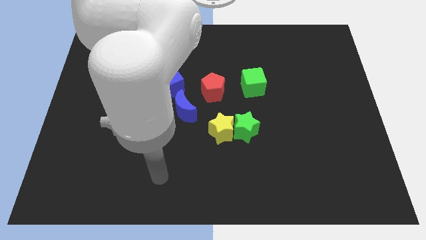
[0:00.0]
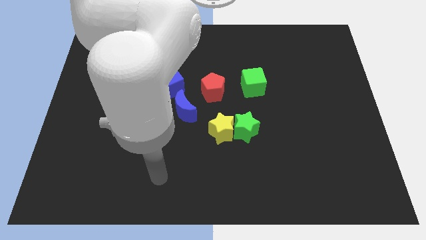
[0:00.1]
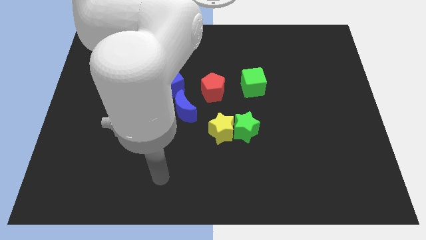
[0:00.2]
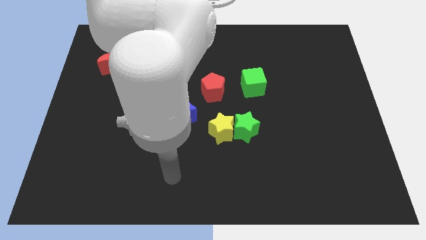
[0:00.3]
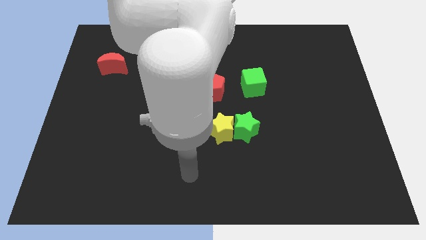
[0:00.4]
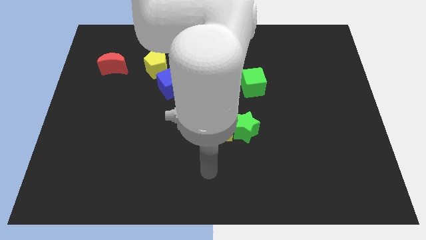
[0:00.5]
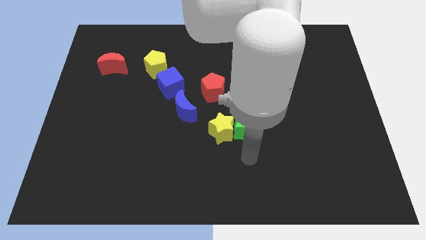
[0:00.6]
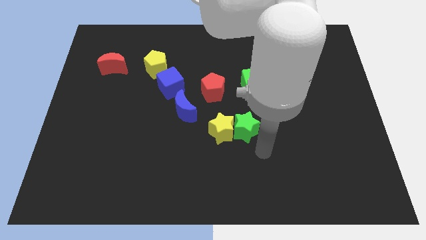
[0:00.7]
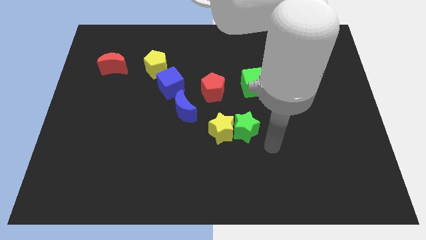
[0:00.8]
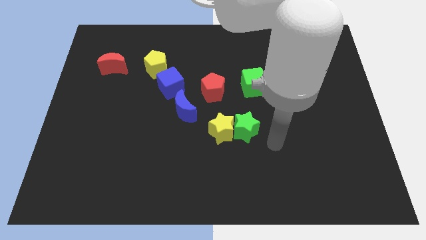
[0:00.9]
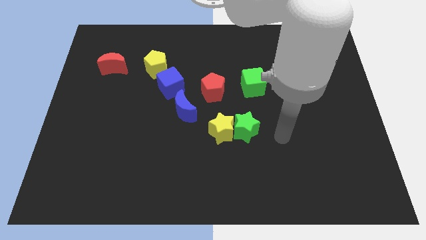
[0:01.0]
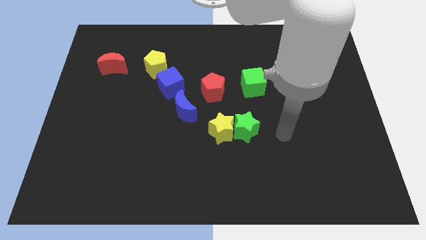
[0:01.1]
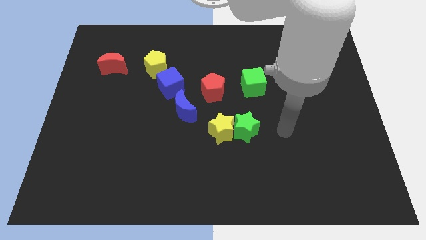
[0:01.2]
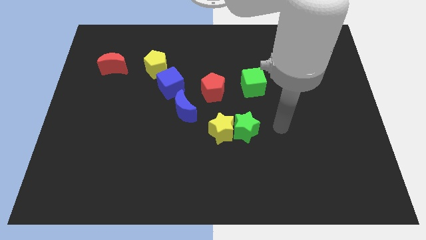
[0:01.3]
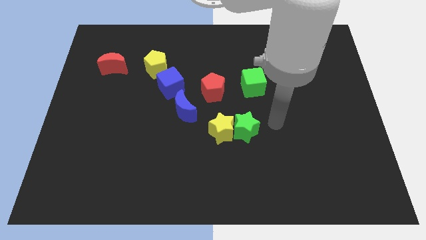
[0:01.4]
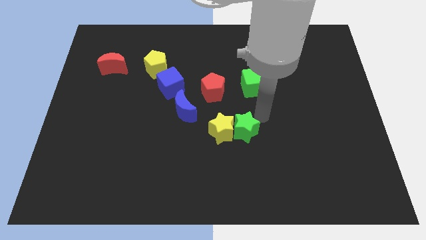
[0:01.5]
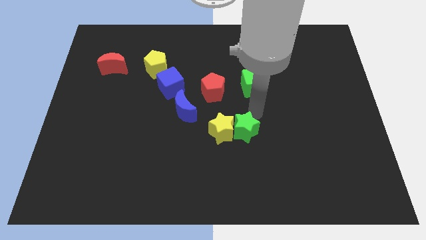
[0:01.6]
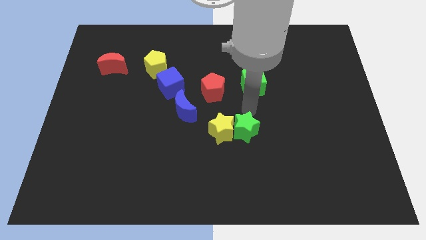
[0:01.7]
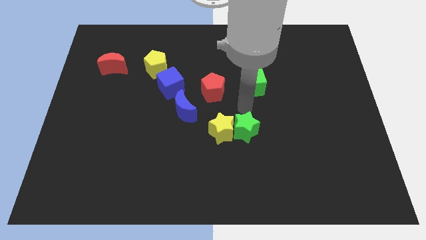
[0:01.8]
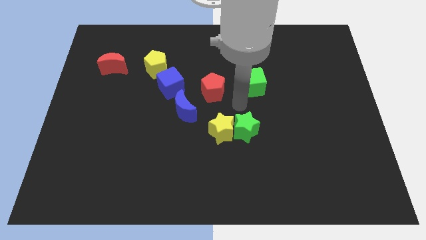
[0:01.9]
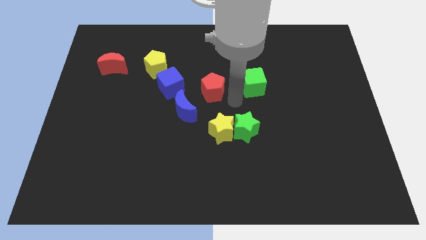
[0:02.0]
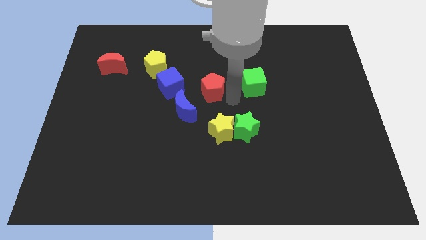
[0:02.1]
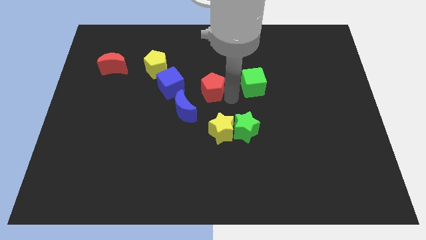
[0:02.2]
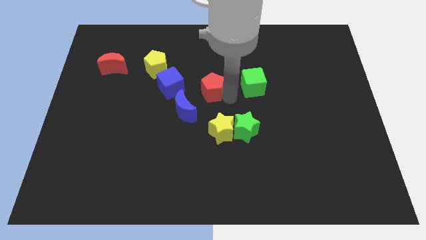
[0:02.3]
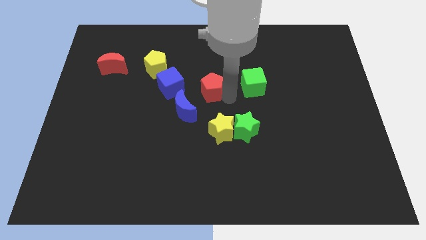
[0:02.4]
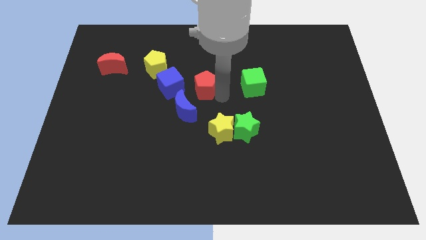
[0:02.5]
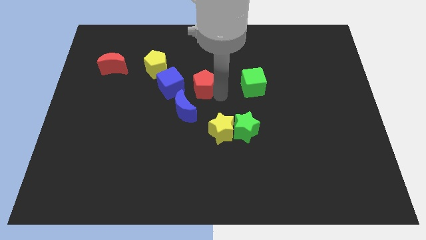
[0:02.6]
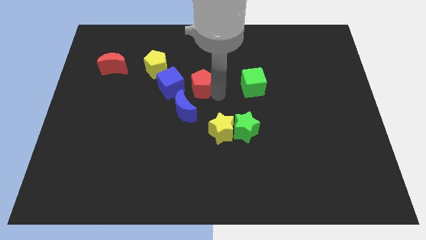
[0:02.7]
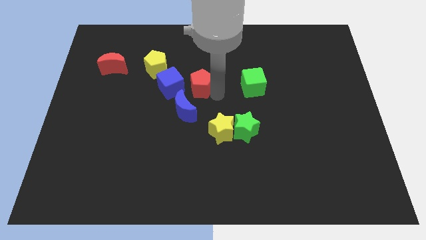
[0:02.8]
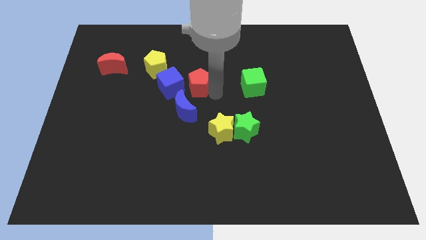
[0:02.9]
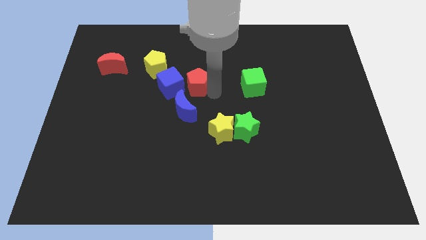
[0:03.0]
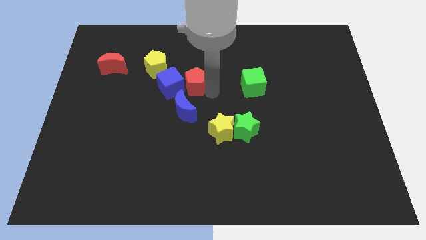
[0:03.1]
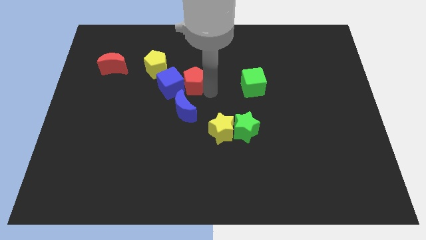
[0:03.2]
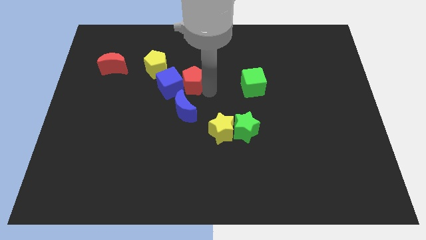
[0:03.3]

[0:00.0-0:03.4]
slide the red pentagon close to the blue cube

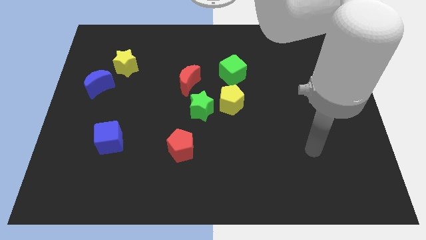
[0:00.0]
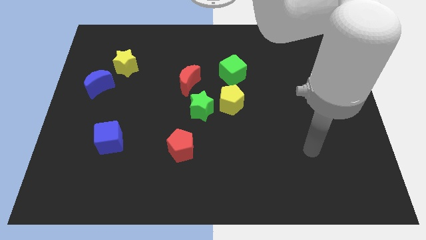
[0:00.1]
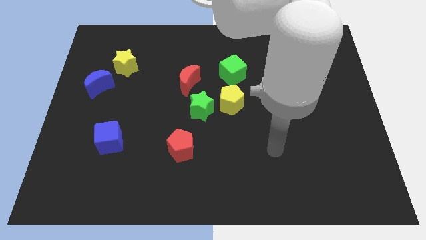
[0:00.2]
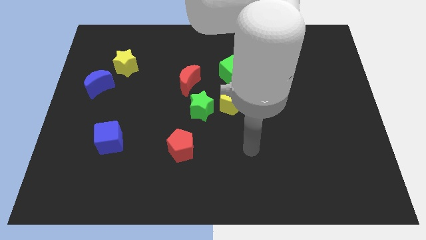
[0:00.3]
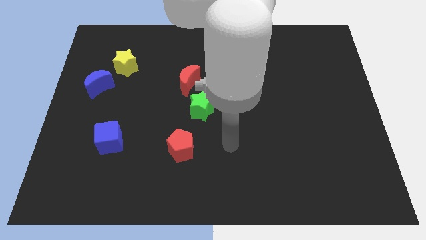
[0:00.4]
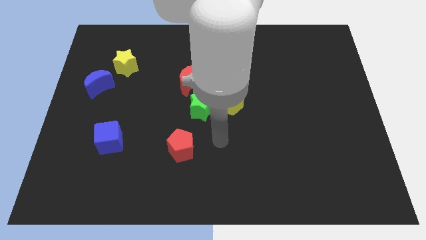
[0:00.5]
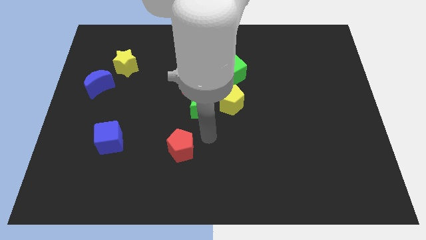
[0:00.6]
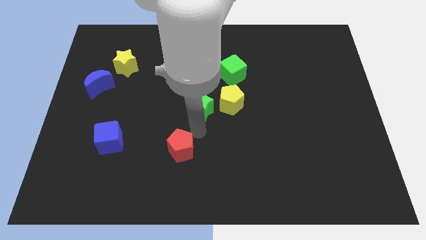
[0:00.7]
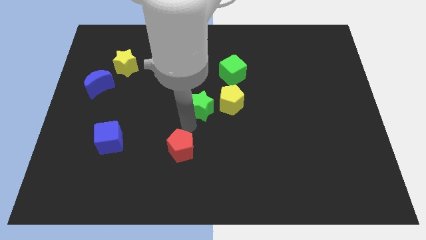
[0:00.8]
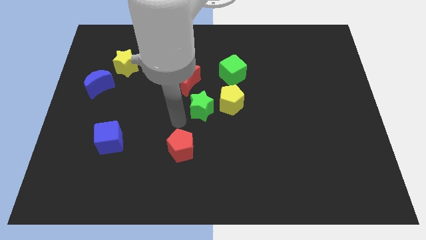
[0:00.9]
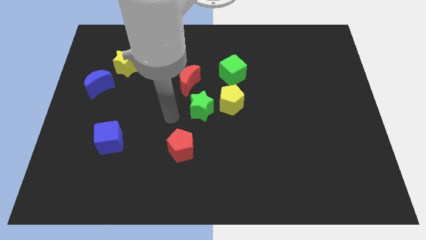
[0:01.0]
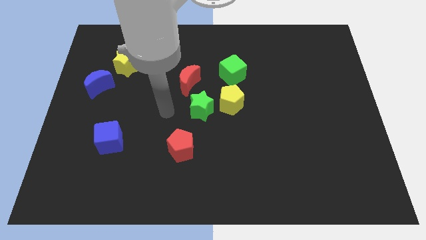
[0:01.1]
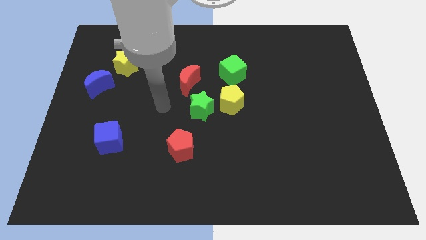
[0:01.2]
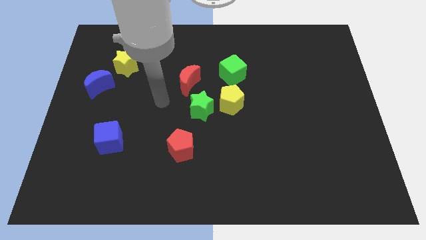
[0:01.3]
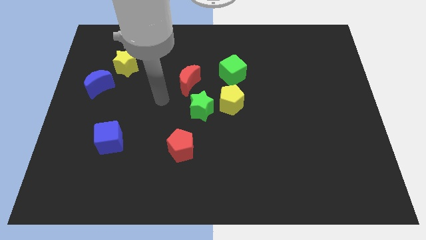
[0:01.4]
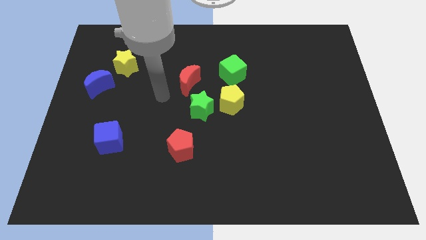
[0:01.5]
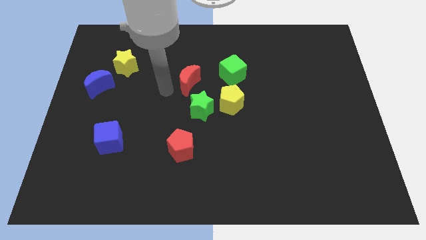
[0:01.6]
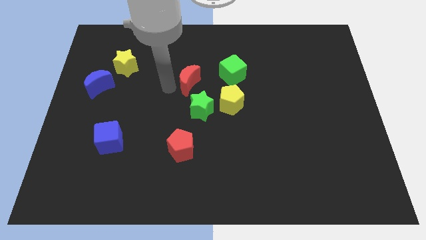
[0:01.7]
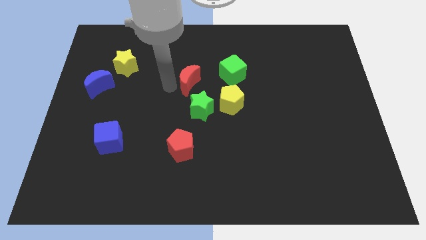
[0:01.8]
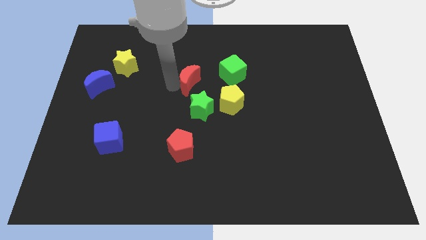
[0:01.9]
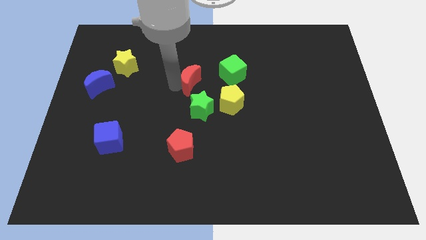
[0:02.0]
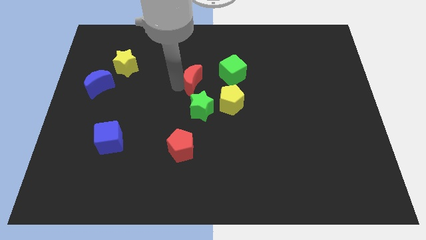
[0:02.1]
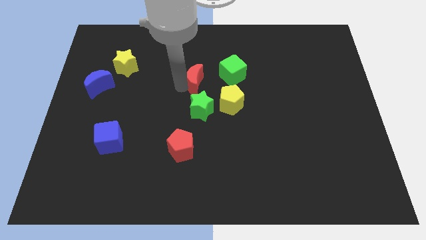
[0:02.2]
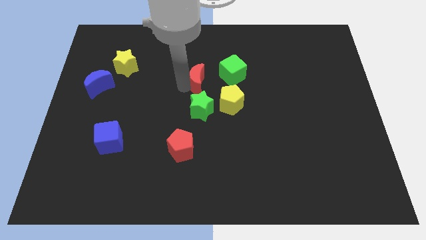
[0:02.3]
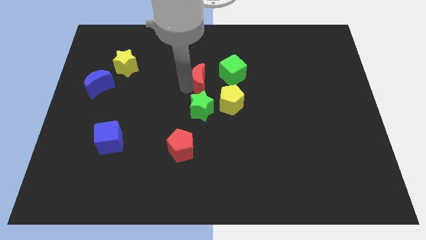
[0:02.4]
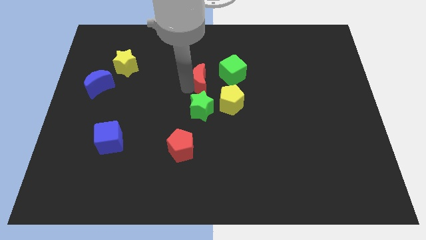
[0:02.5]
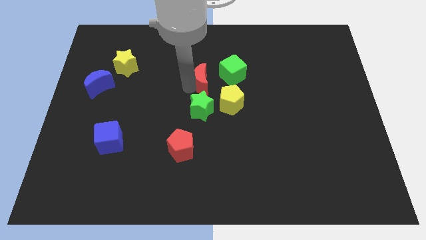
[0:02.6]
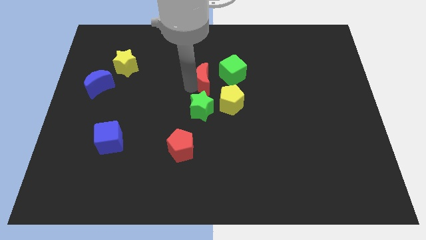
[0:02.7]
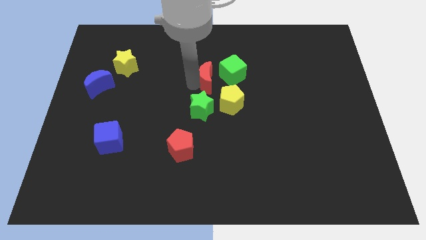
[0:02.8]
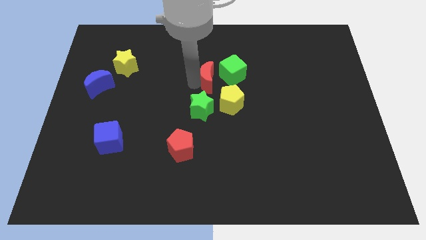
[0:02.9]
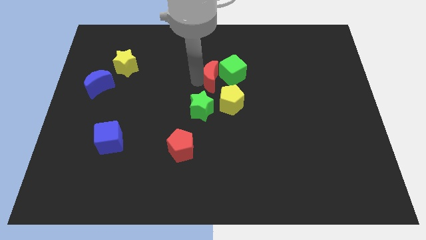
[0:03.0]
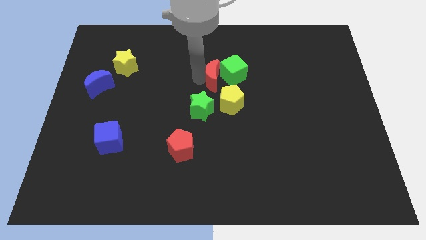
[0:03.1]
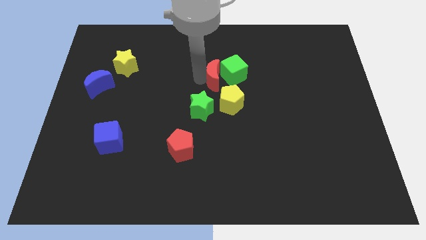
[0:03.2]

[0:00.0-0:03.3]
move the red moon to the green cube

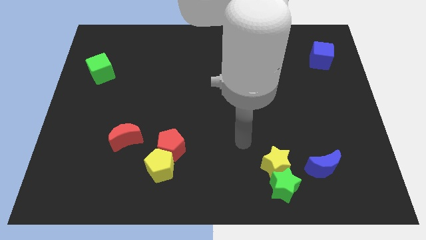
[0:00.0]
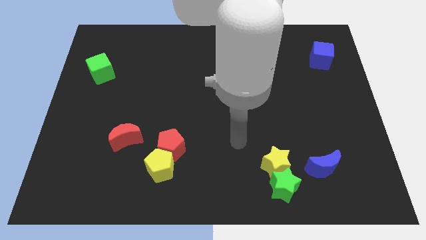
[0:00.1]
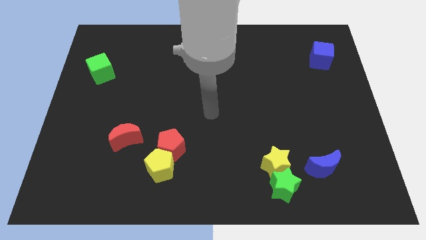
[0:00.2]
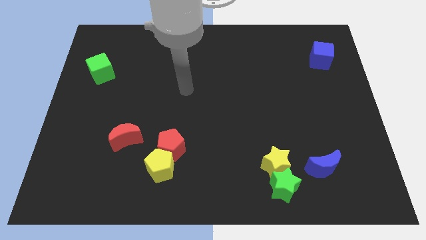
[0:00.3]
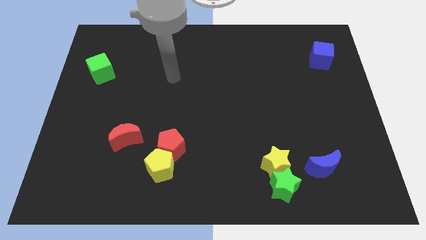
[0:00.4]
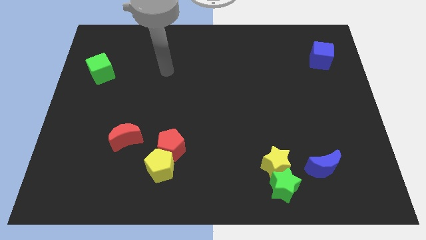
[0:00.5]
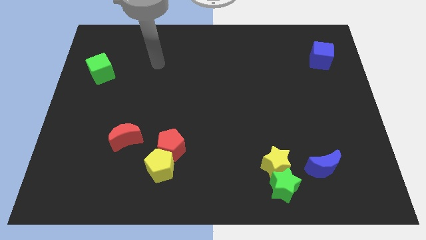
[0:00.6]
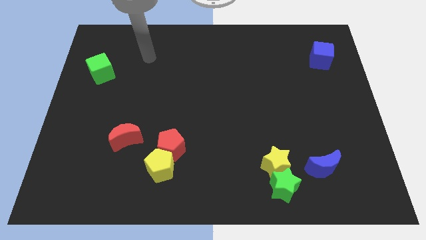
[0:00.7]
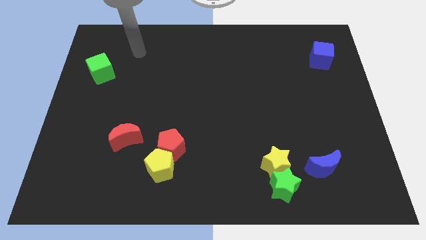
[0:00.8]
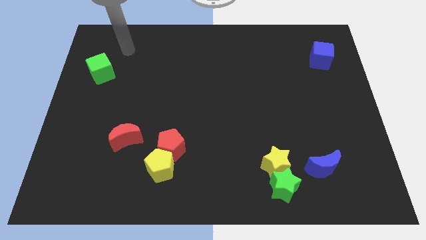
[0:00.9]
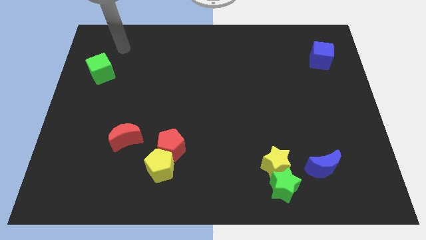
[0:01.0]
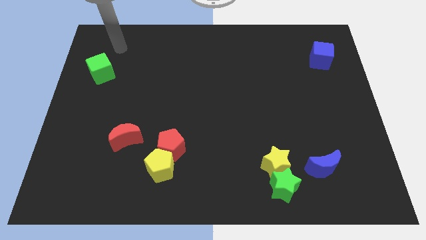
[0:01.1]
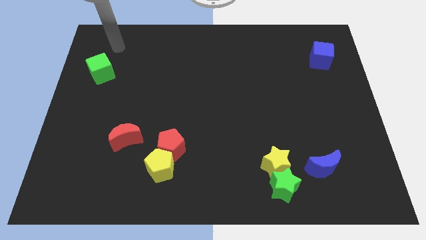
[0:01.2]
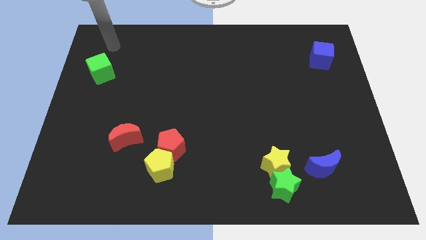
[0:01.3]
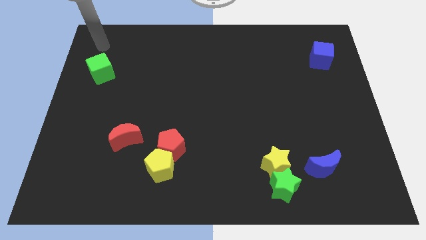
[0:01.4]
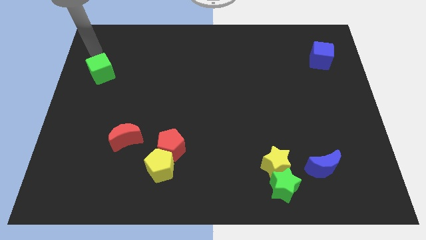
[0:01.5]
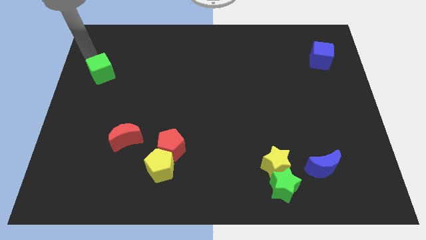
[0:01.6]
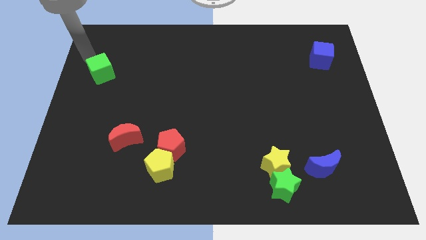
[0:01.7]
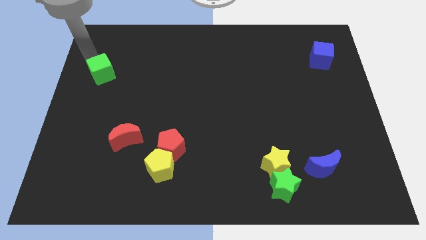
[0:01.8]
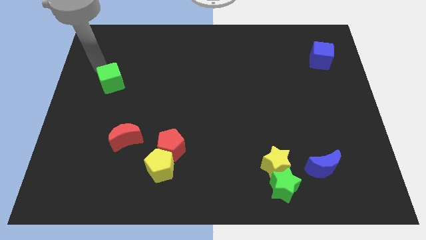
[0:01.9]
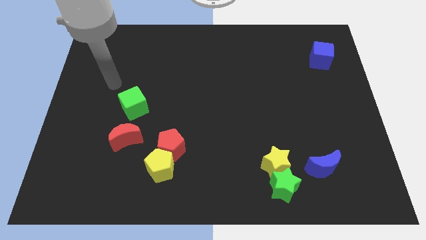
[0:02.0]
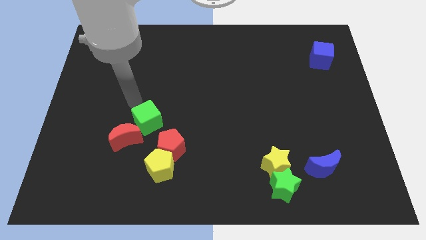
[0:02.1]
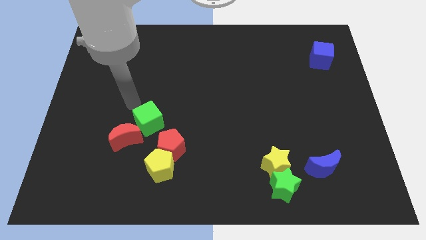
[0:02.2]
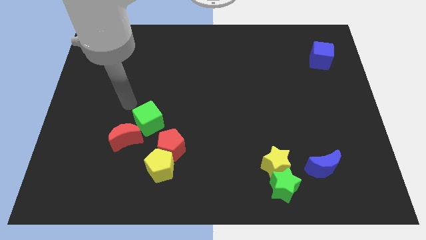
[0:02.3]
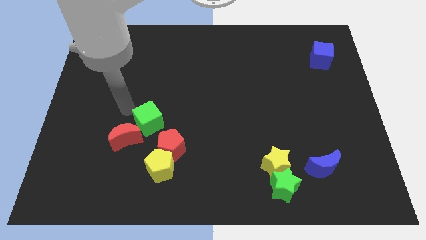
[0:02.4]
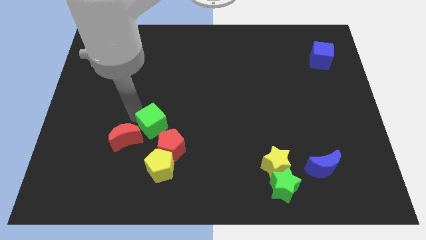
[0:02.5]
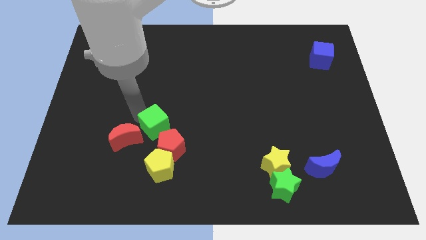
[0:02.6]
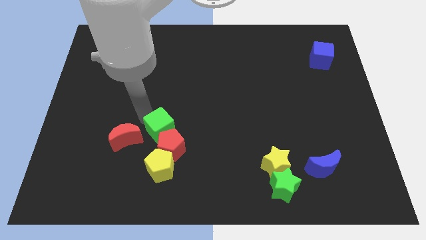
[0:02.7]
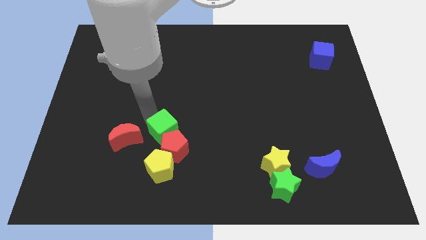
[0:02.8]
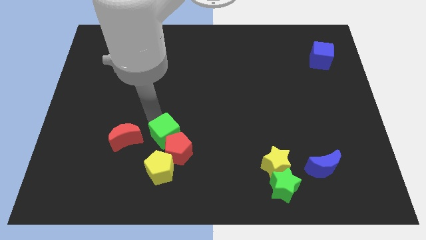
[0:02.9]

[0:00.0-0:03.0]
move the green cube to the red pentagon
